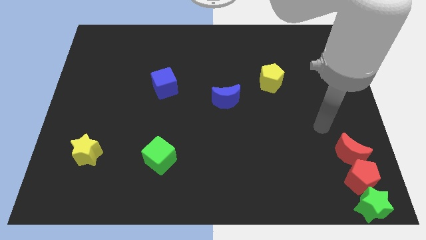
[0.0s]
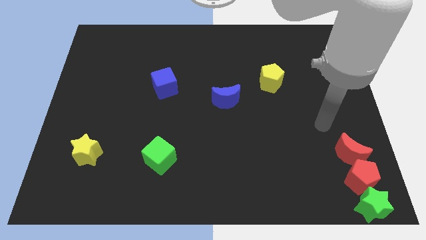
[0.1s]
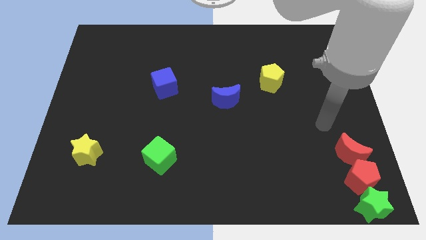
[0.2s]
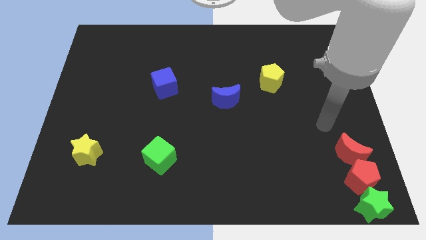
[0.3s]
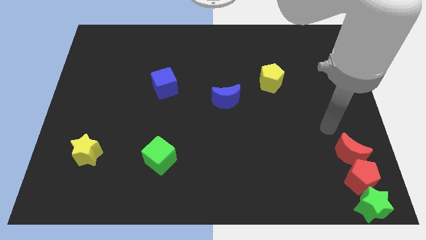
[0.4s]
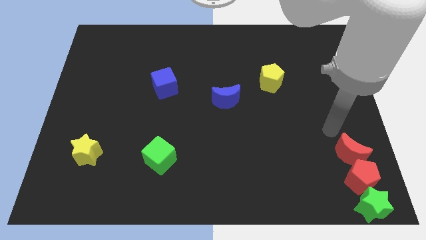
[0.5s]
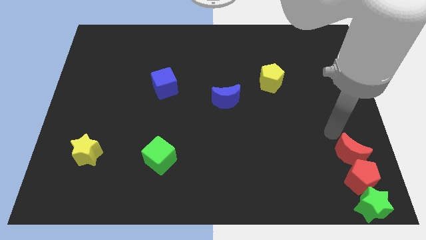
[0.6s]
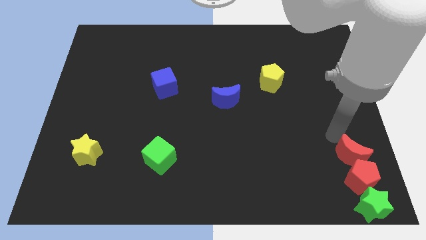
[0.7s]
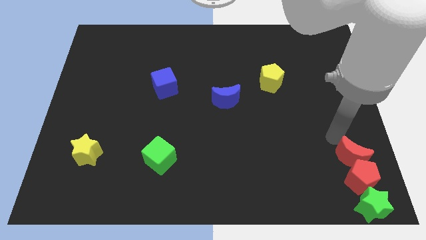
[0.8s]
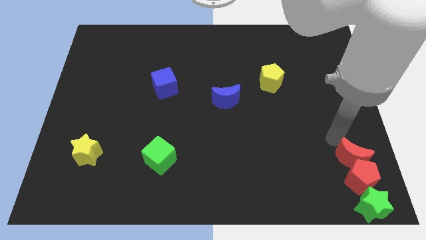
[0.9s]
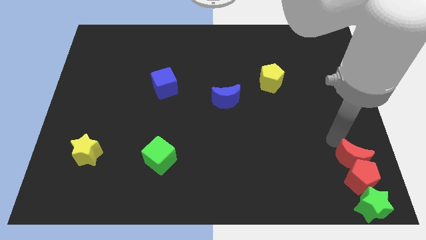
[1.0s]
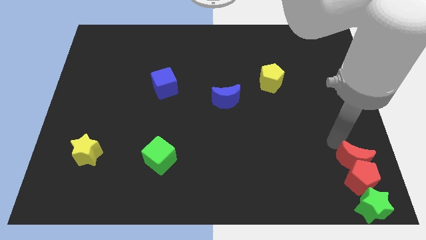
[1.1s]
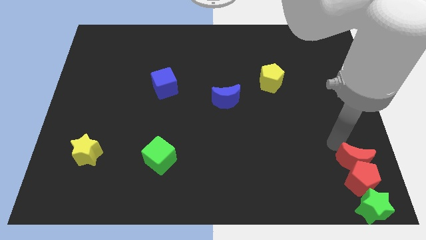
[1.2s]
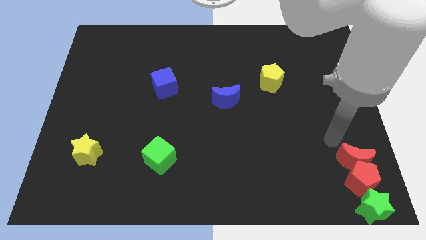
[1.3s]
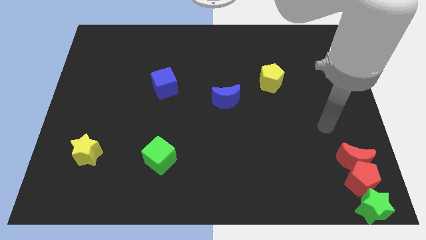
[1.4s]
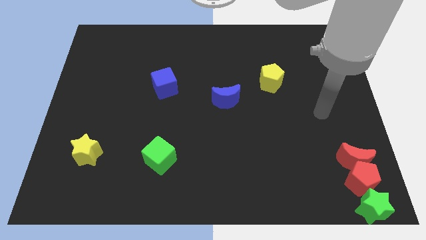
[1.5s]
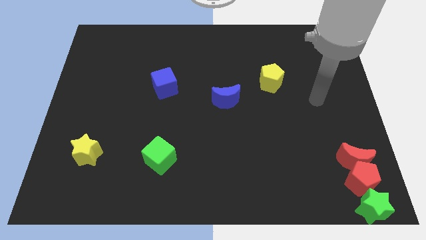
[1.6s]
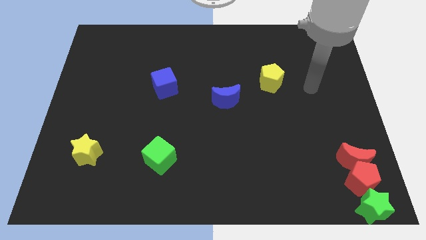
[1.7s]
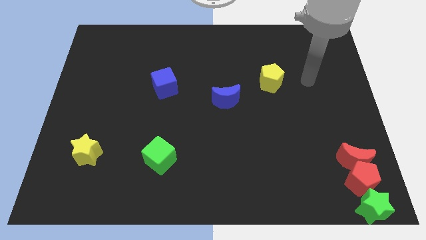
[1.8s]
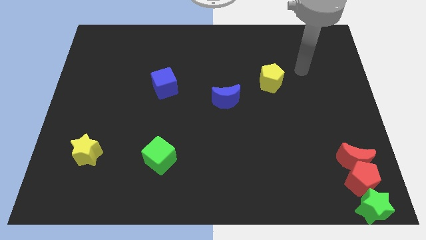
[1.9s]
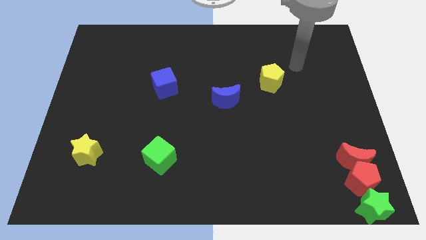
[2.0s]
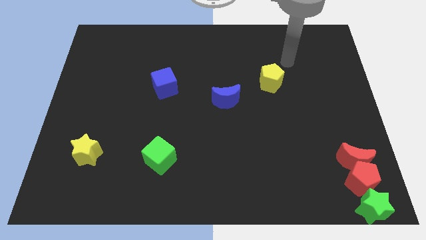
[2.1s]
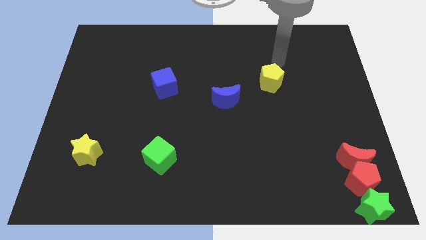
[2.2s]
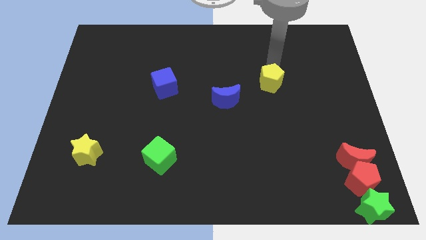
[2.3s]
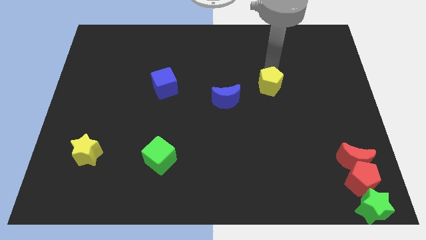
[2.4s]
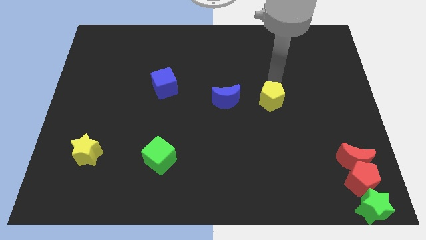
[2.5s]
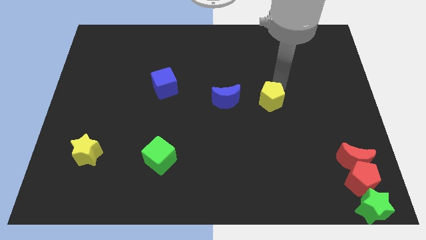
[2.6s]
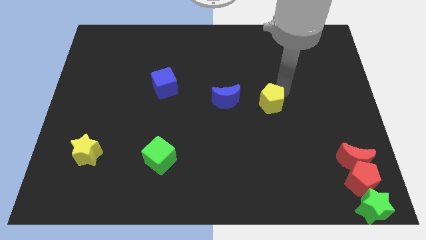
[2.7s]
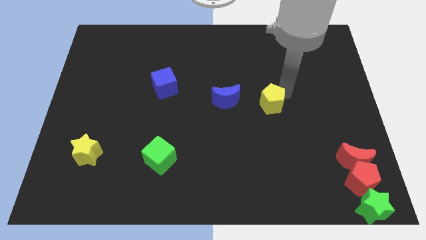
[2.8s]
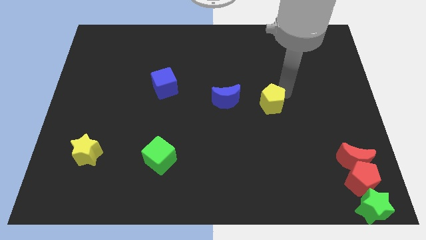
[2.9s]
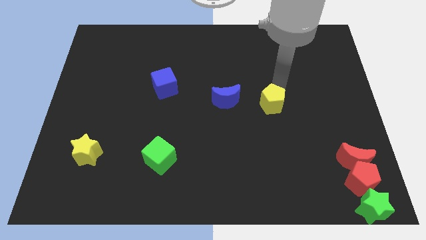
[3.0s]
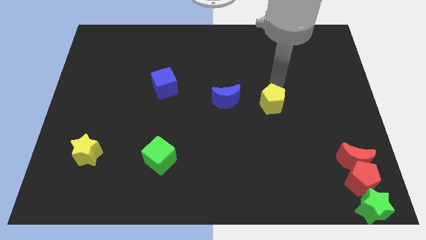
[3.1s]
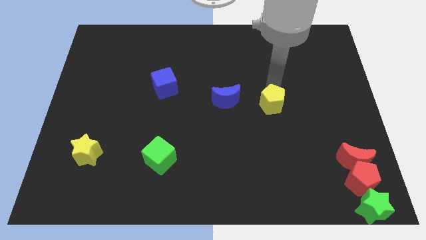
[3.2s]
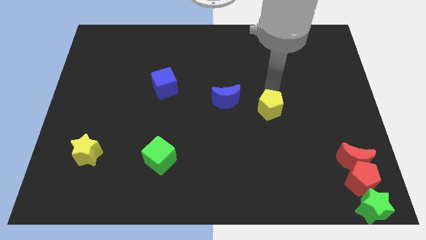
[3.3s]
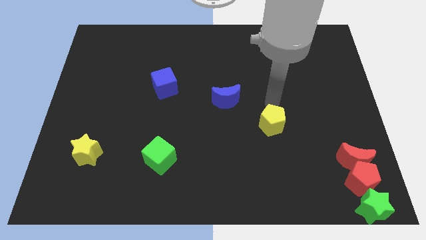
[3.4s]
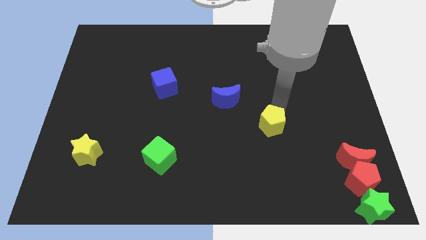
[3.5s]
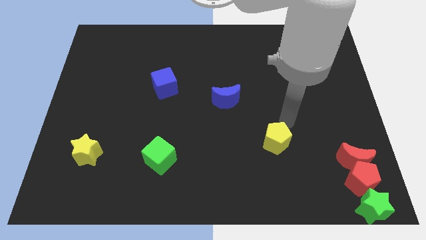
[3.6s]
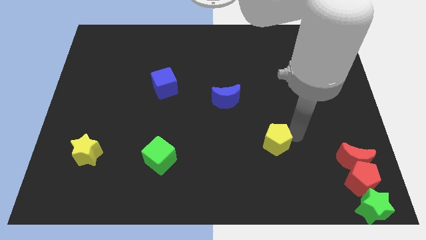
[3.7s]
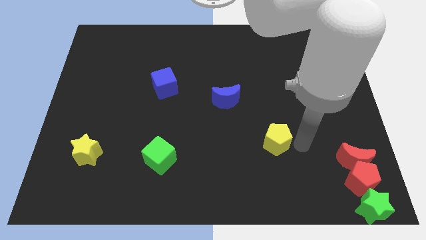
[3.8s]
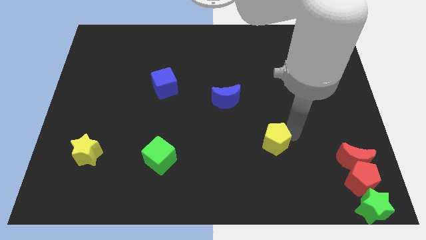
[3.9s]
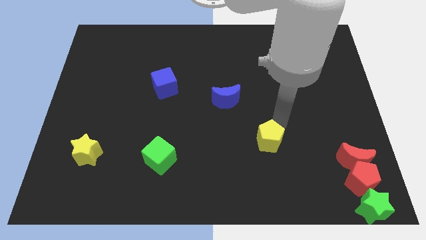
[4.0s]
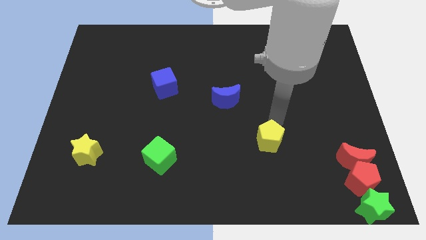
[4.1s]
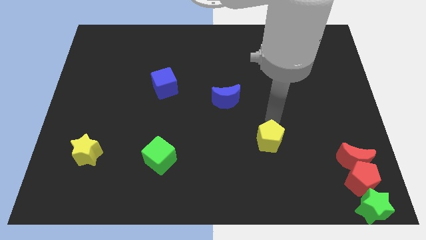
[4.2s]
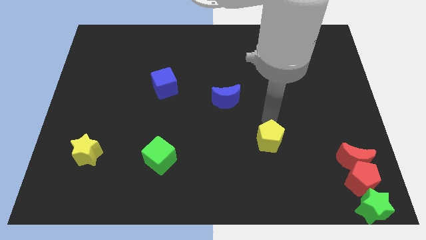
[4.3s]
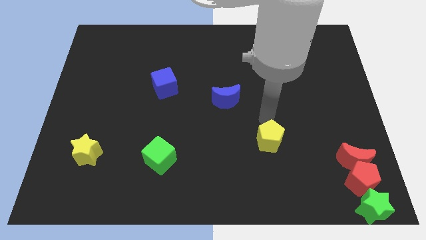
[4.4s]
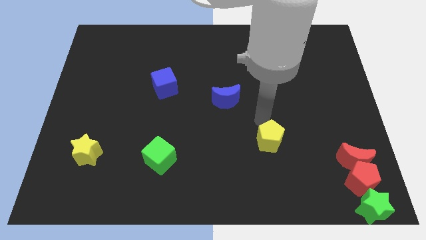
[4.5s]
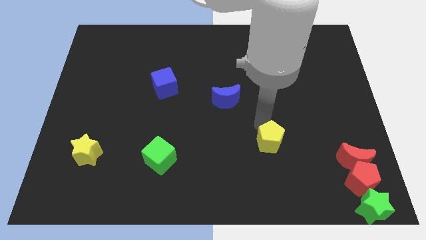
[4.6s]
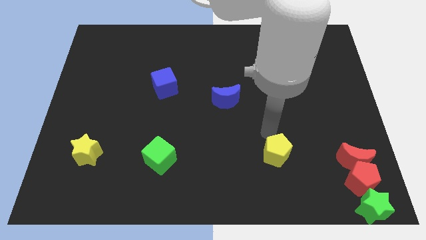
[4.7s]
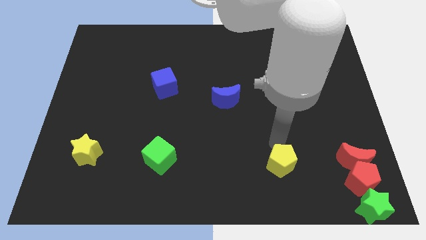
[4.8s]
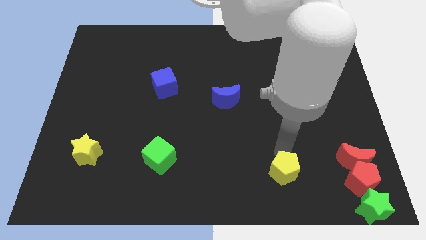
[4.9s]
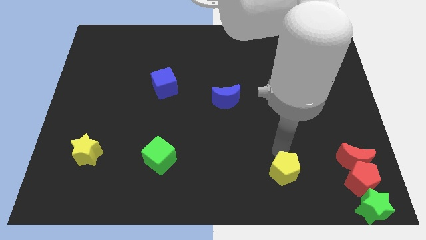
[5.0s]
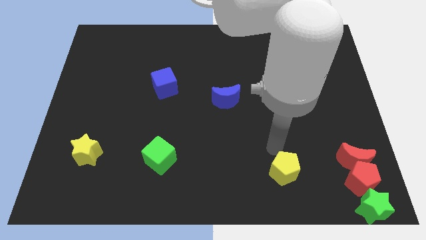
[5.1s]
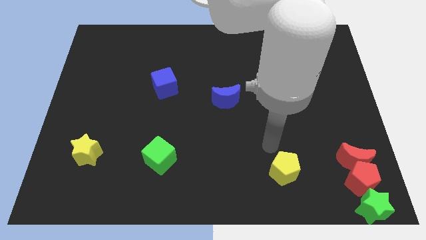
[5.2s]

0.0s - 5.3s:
place the yellow pentagon to the right of the green cube

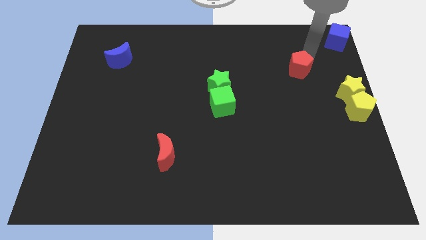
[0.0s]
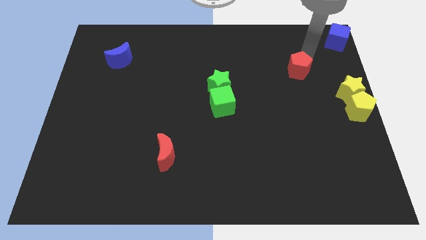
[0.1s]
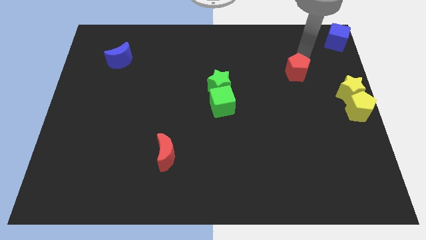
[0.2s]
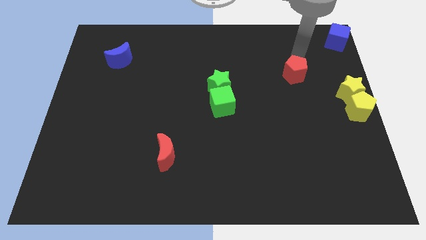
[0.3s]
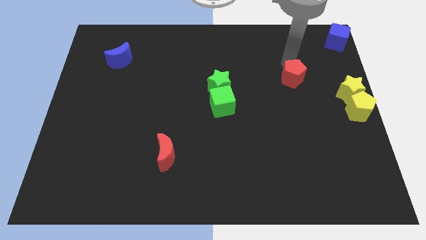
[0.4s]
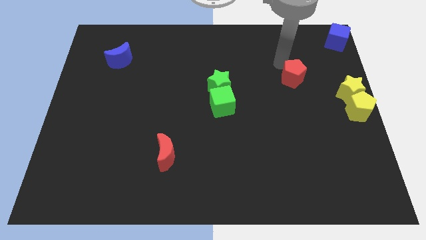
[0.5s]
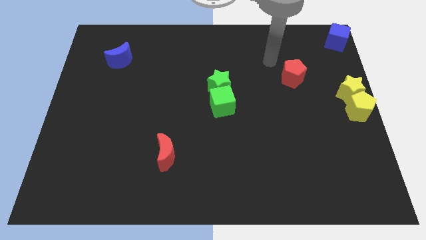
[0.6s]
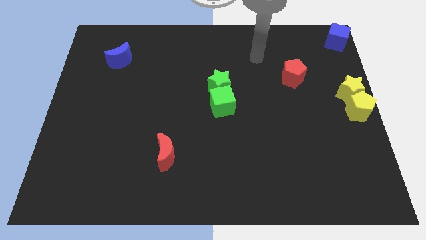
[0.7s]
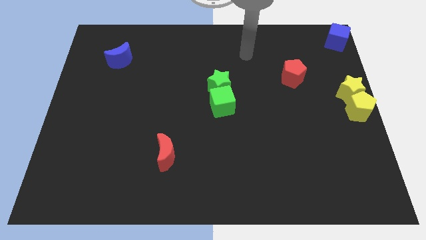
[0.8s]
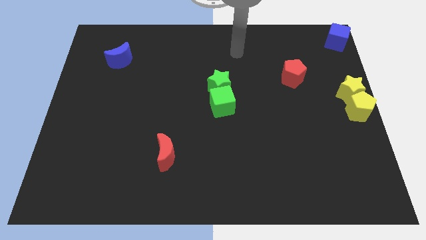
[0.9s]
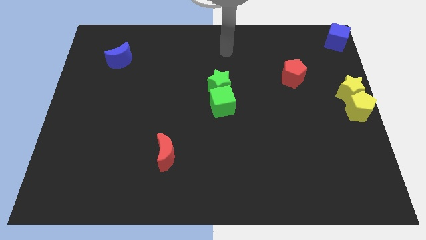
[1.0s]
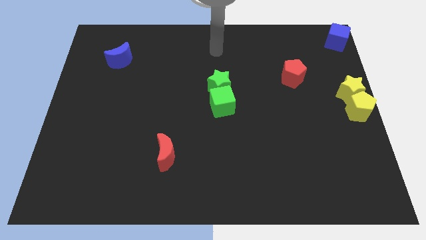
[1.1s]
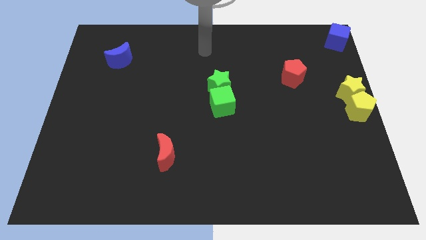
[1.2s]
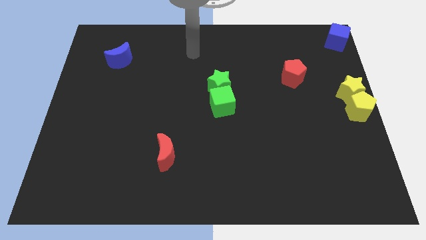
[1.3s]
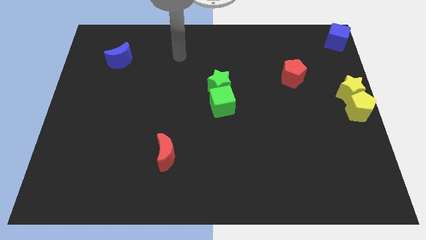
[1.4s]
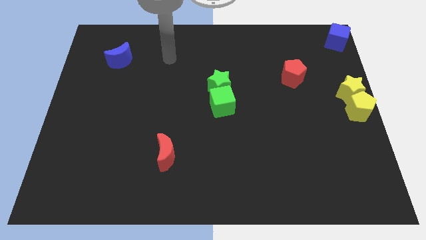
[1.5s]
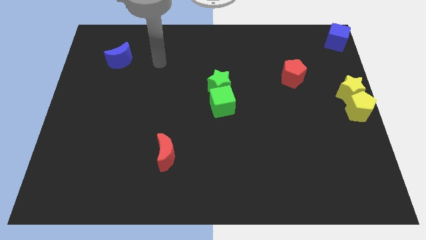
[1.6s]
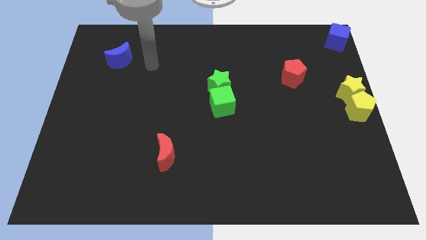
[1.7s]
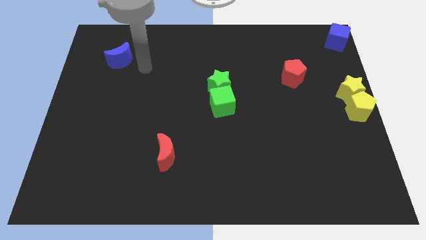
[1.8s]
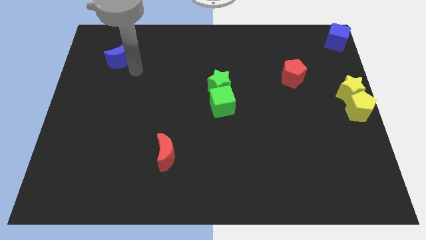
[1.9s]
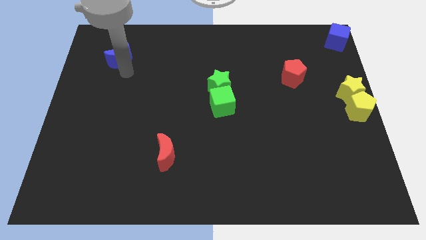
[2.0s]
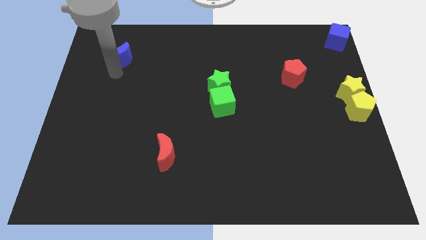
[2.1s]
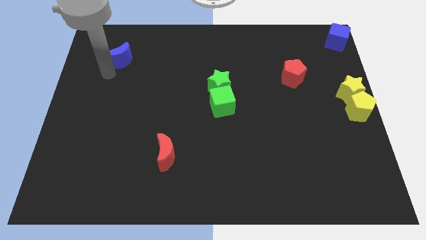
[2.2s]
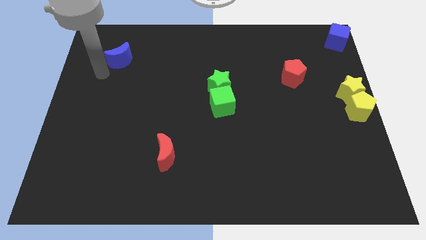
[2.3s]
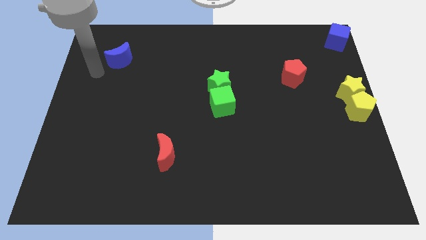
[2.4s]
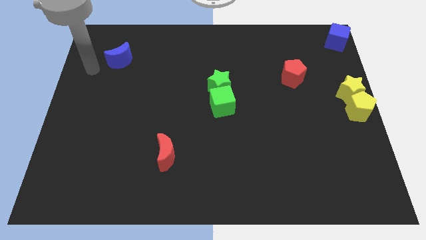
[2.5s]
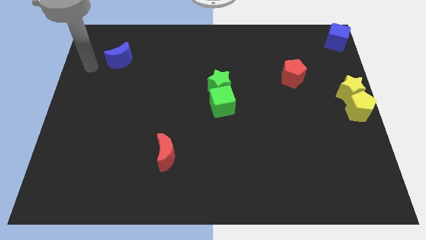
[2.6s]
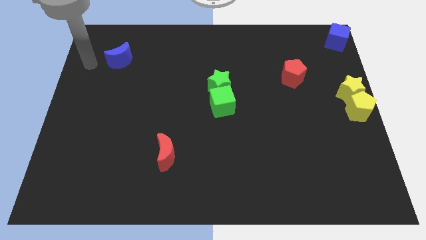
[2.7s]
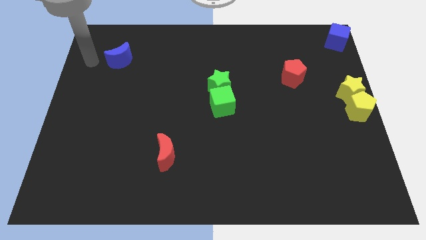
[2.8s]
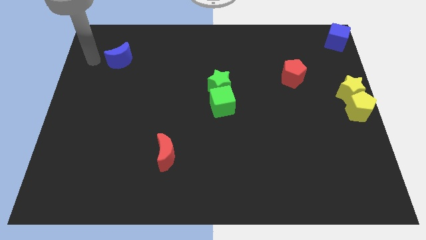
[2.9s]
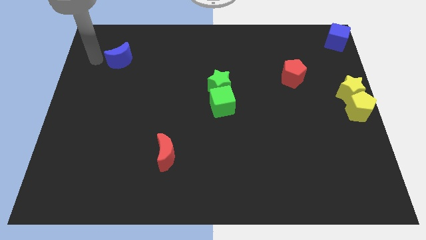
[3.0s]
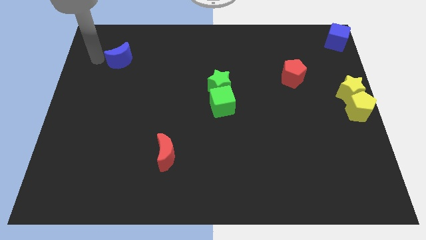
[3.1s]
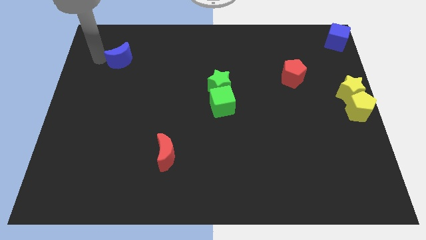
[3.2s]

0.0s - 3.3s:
move red pentagon slightly down

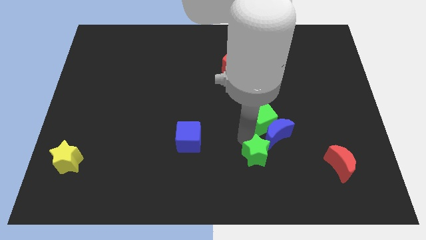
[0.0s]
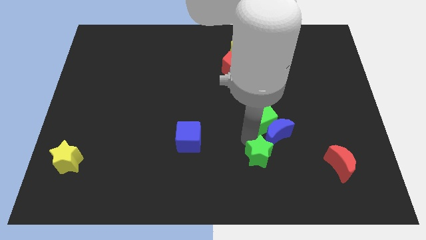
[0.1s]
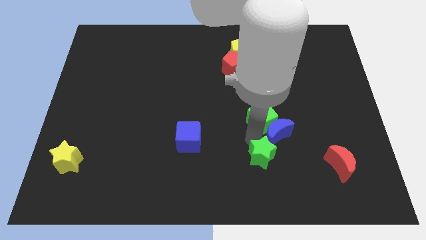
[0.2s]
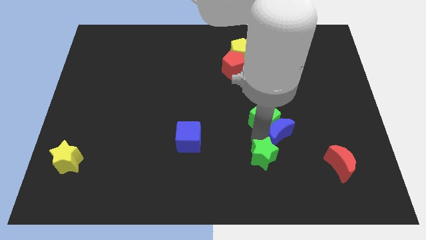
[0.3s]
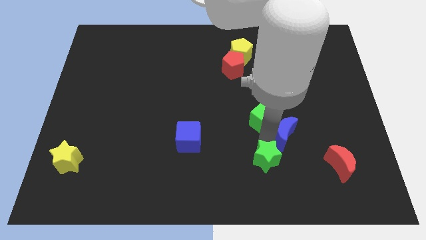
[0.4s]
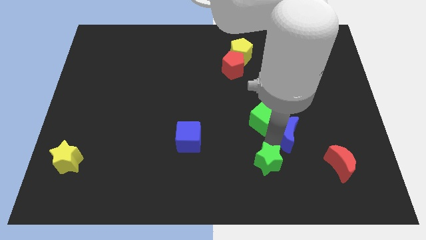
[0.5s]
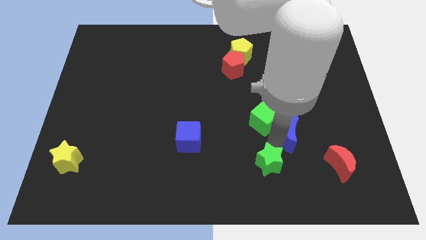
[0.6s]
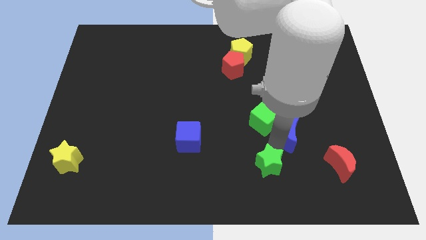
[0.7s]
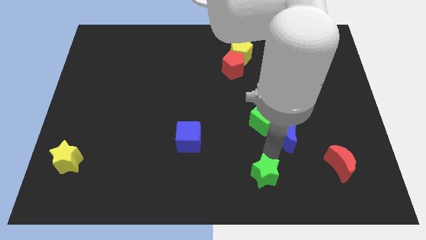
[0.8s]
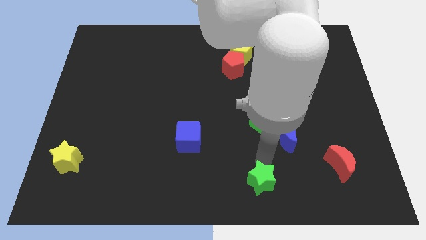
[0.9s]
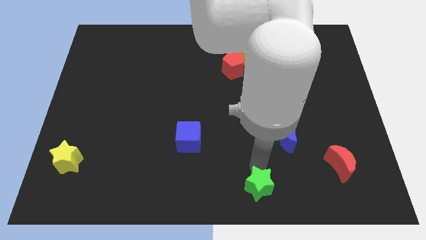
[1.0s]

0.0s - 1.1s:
move the green star vertically to the green cube
